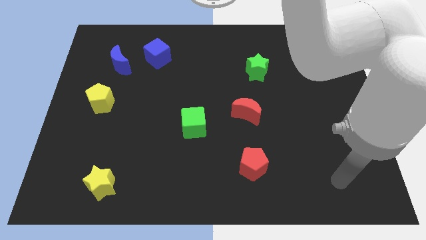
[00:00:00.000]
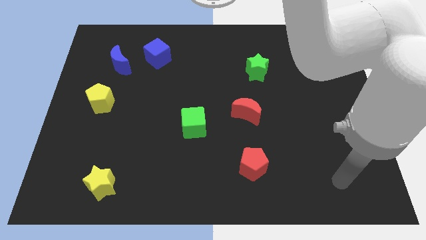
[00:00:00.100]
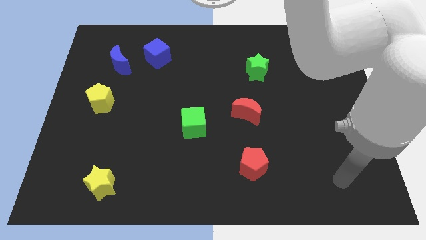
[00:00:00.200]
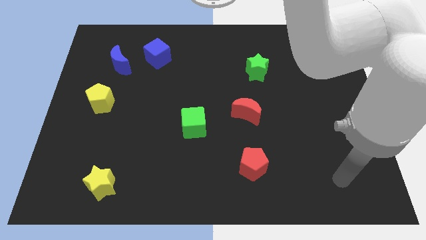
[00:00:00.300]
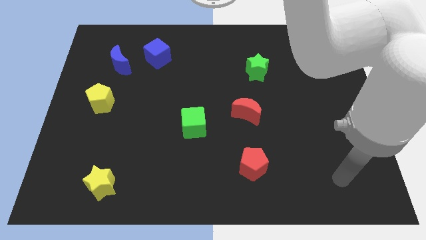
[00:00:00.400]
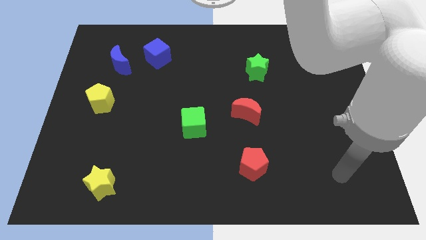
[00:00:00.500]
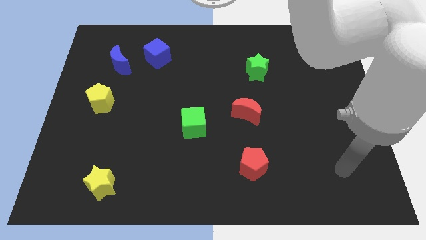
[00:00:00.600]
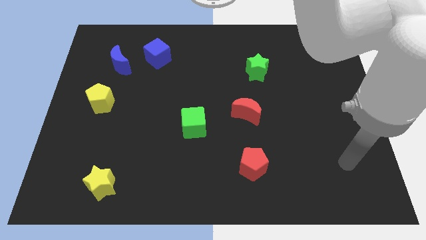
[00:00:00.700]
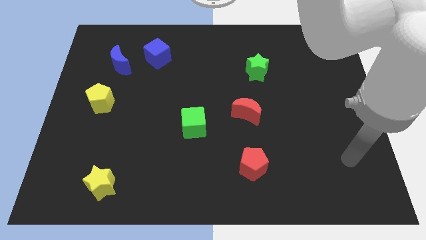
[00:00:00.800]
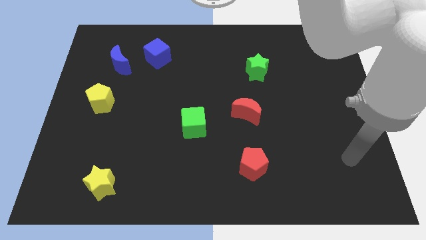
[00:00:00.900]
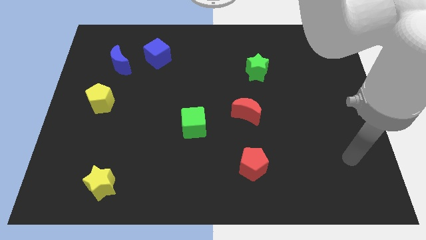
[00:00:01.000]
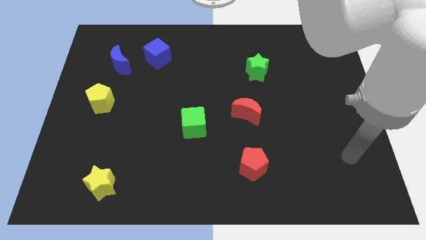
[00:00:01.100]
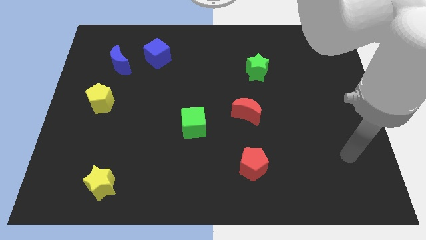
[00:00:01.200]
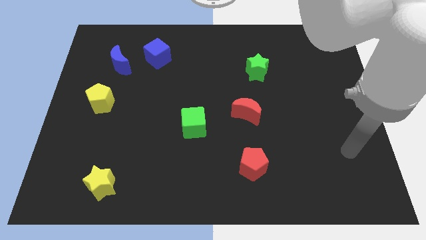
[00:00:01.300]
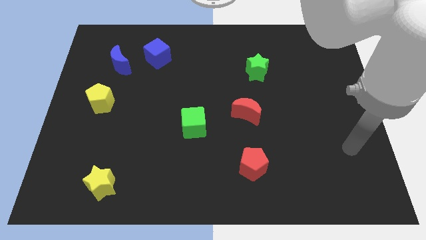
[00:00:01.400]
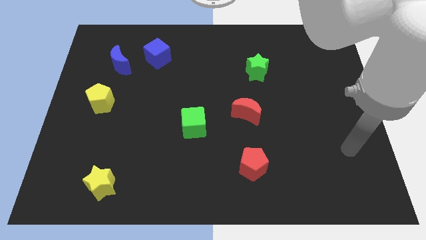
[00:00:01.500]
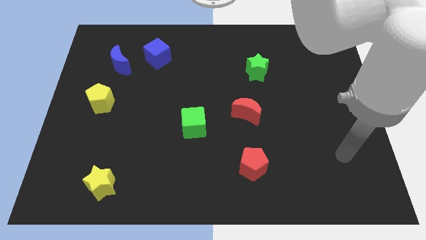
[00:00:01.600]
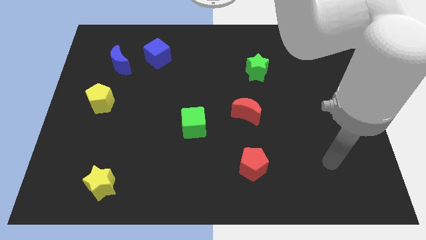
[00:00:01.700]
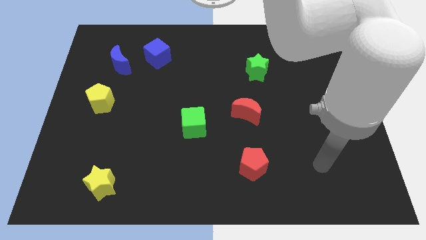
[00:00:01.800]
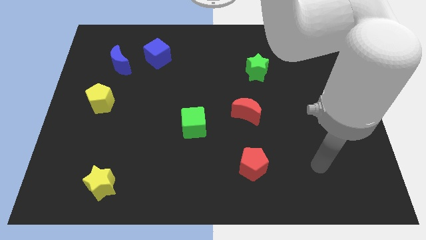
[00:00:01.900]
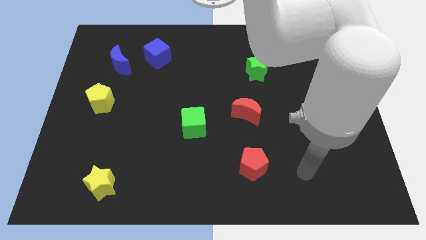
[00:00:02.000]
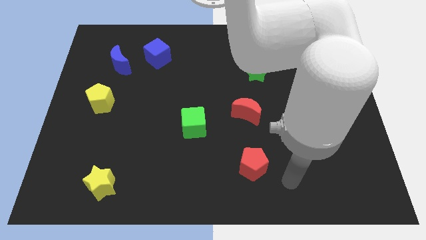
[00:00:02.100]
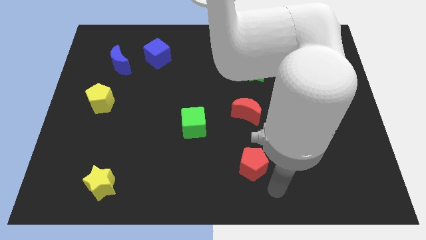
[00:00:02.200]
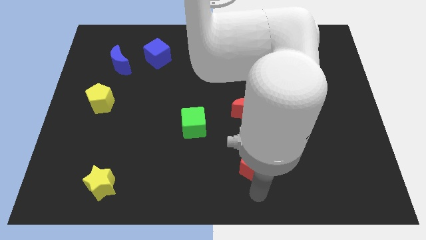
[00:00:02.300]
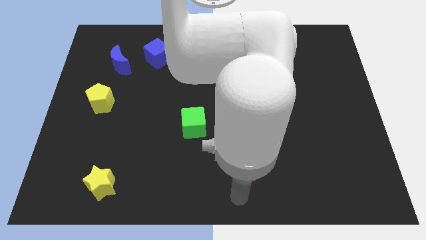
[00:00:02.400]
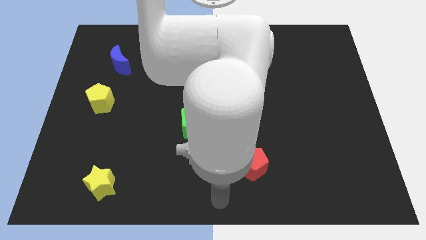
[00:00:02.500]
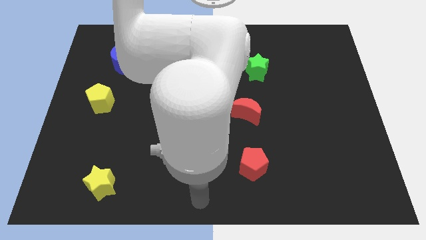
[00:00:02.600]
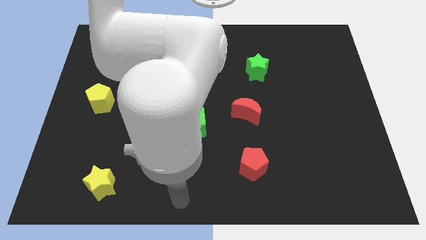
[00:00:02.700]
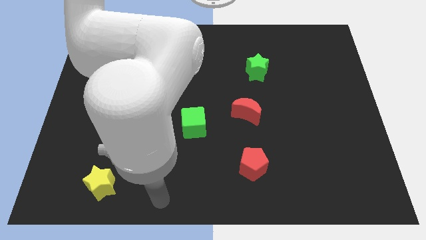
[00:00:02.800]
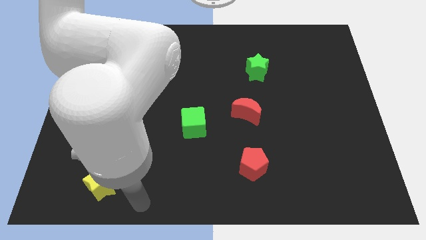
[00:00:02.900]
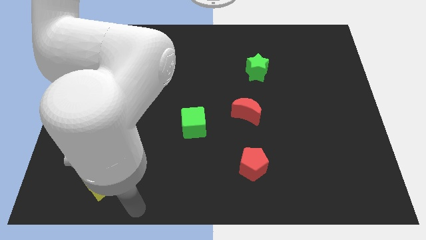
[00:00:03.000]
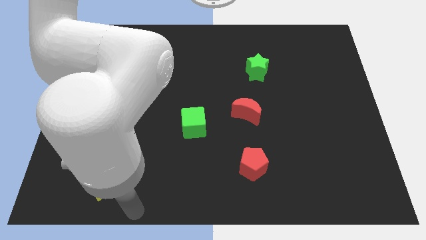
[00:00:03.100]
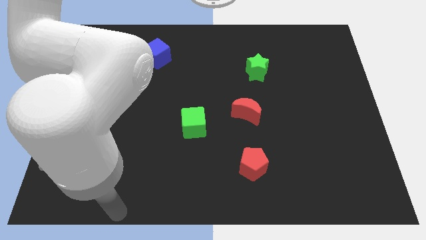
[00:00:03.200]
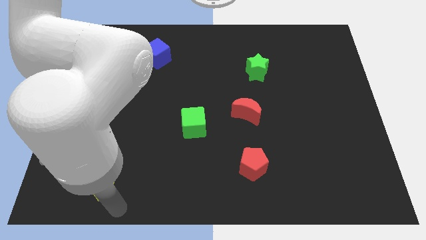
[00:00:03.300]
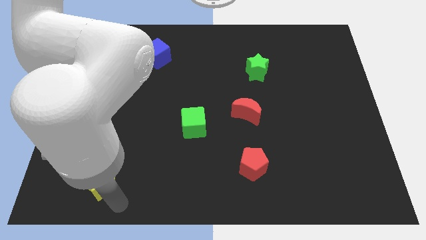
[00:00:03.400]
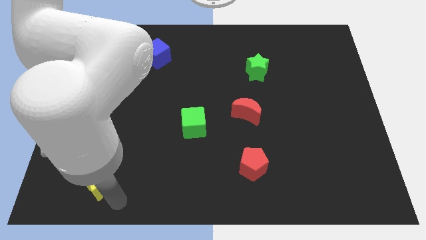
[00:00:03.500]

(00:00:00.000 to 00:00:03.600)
point your arm at the bottom of the yellow star

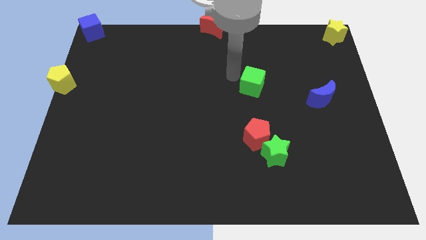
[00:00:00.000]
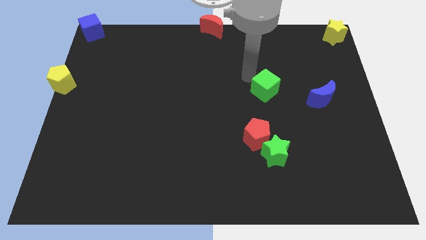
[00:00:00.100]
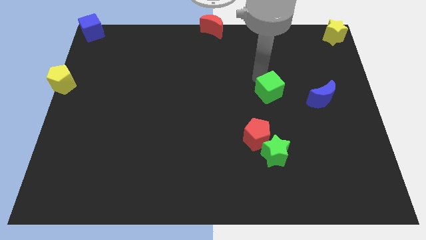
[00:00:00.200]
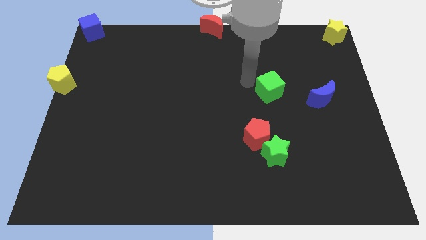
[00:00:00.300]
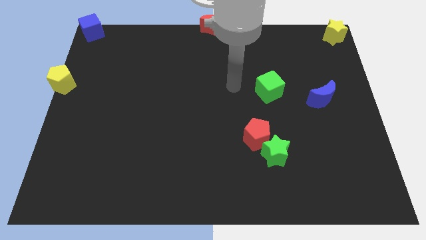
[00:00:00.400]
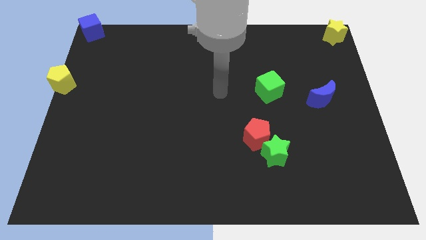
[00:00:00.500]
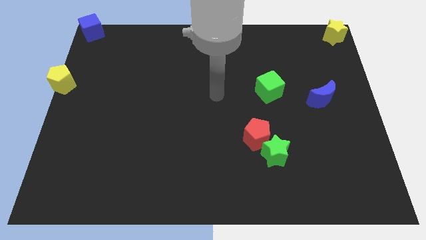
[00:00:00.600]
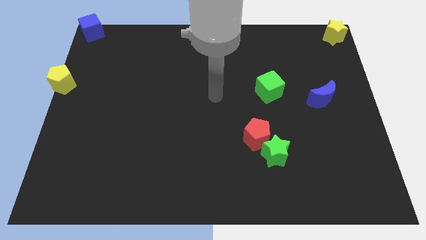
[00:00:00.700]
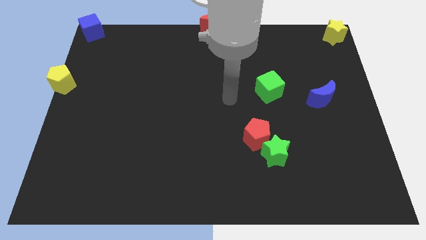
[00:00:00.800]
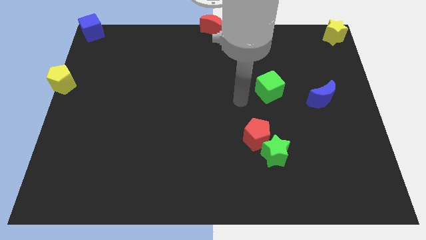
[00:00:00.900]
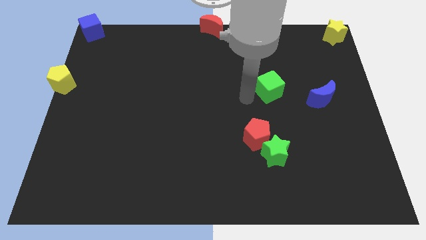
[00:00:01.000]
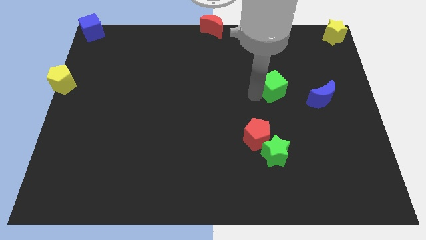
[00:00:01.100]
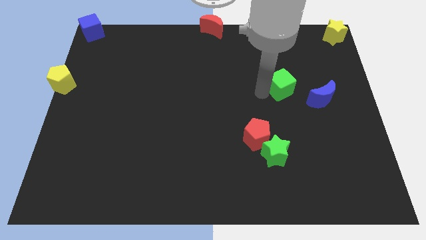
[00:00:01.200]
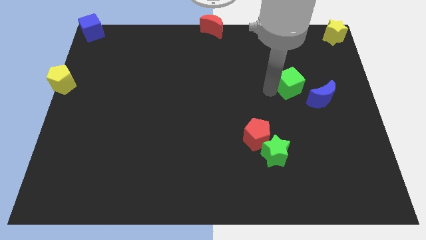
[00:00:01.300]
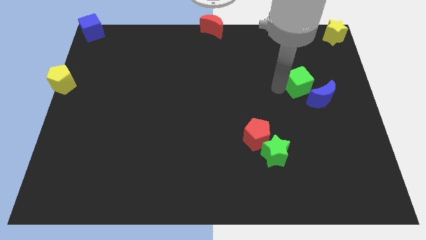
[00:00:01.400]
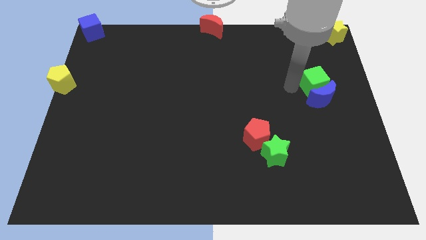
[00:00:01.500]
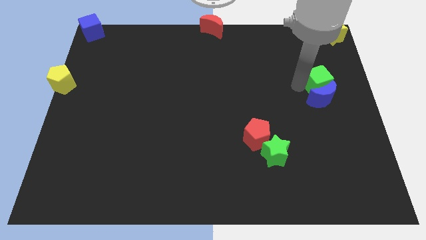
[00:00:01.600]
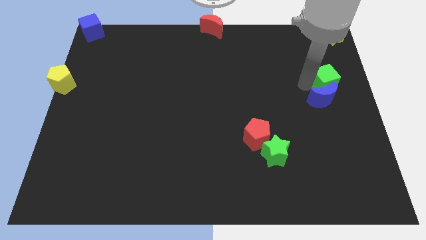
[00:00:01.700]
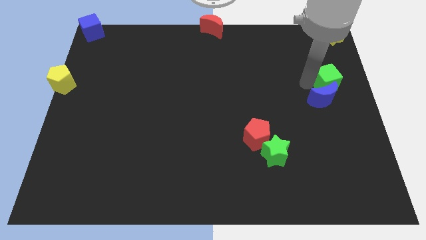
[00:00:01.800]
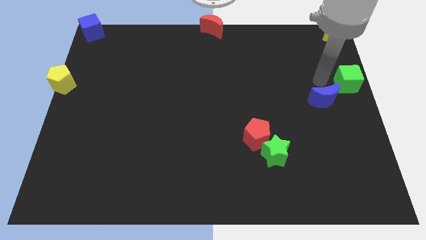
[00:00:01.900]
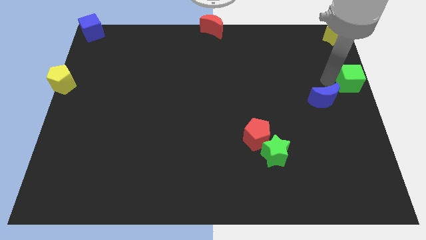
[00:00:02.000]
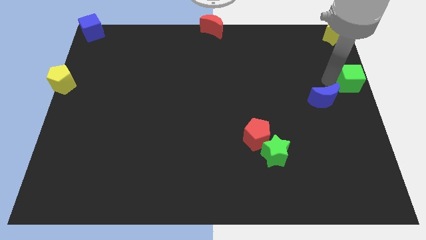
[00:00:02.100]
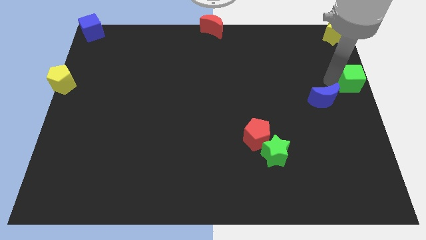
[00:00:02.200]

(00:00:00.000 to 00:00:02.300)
push the green cube below the yellow star

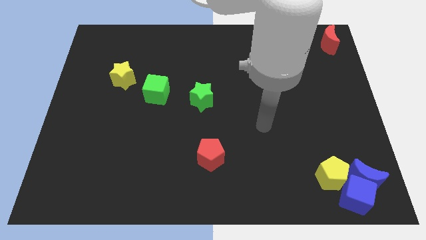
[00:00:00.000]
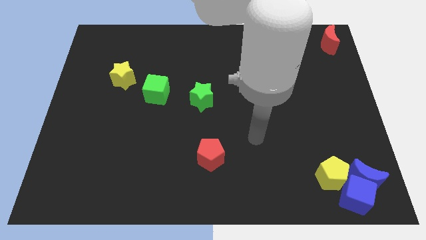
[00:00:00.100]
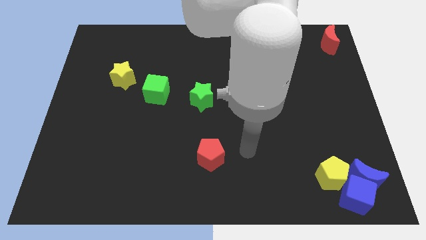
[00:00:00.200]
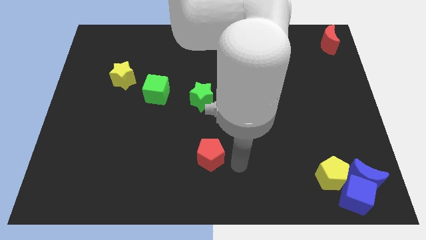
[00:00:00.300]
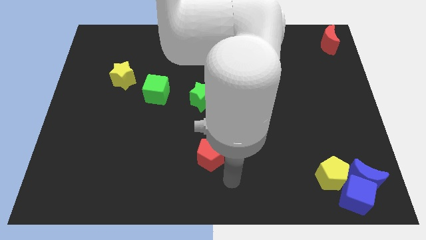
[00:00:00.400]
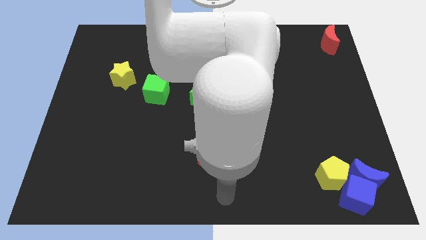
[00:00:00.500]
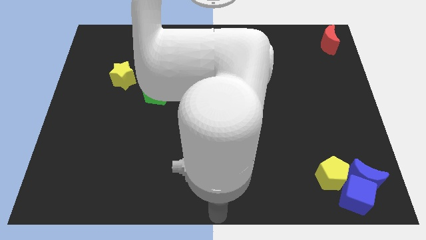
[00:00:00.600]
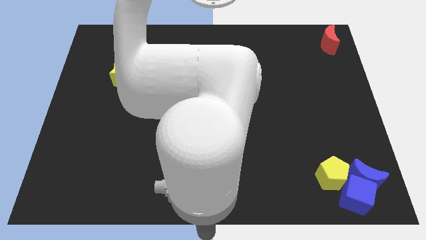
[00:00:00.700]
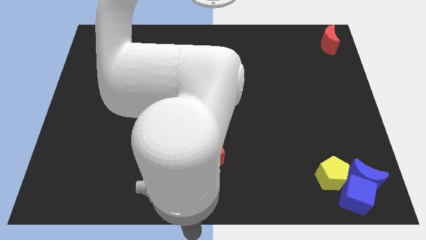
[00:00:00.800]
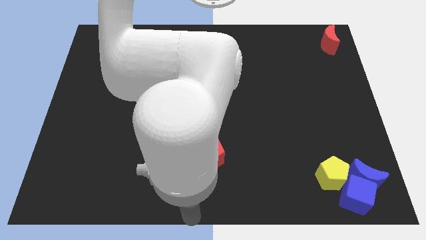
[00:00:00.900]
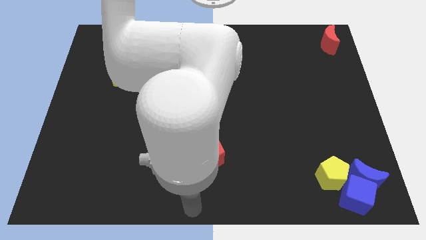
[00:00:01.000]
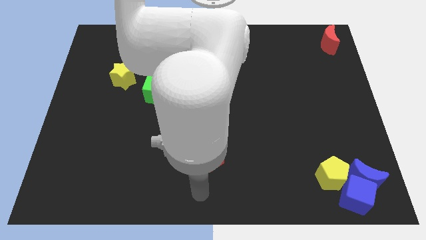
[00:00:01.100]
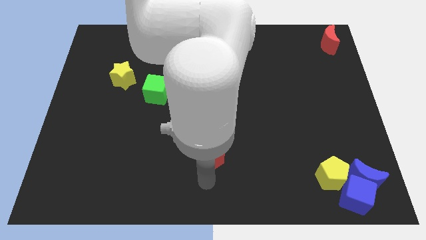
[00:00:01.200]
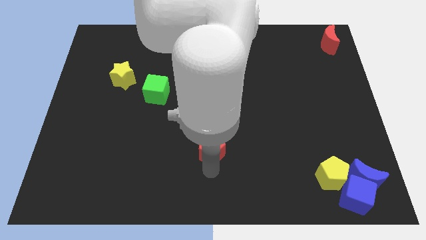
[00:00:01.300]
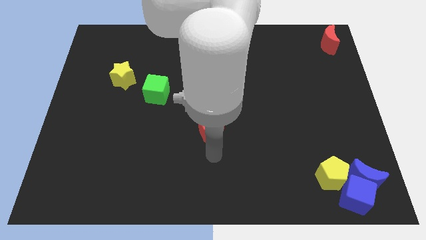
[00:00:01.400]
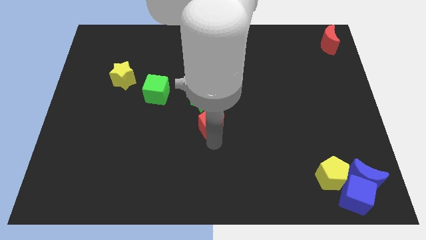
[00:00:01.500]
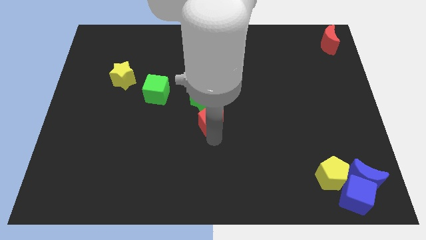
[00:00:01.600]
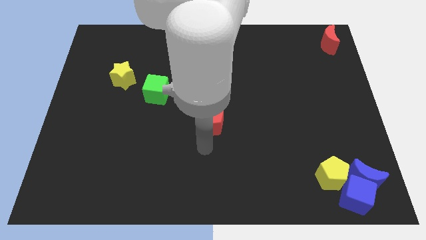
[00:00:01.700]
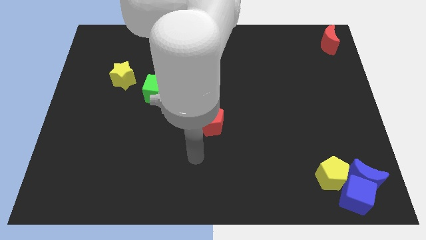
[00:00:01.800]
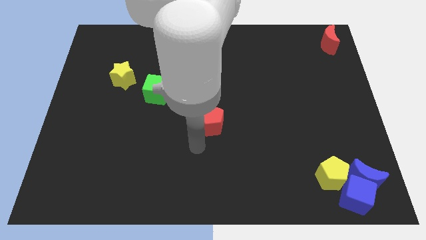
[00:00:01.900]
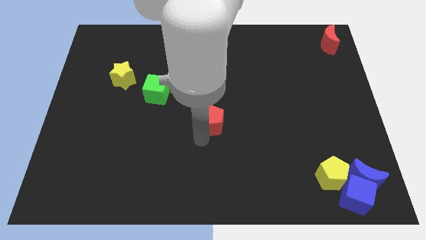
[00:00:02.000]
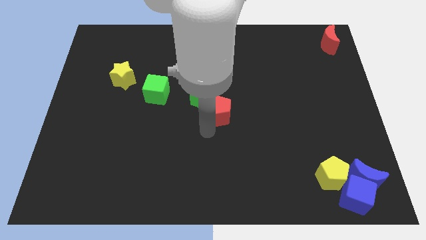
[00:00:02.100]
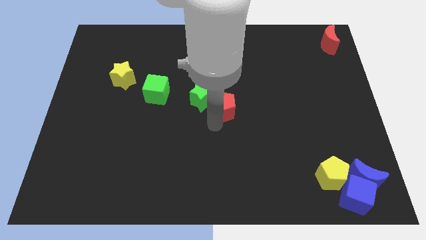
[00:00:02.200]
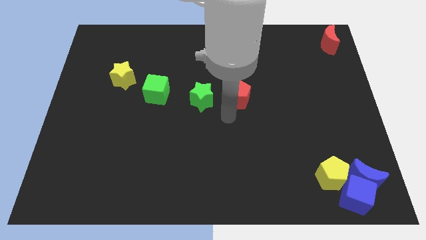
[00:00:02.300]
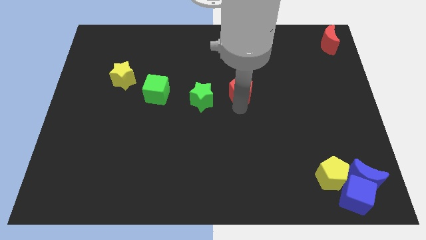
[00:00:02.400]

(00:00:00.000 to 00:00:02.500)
put red pentagon parallel right to green star

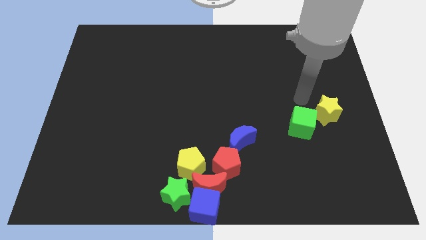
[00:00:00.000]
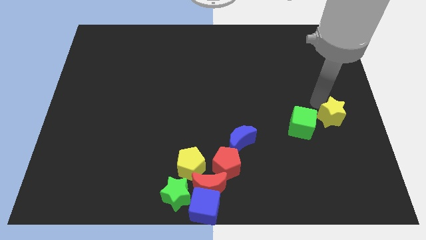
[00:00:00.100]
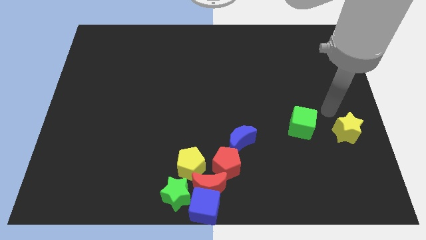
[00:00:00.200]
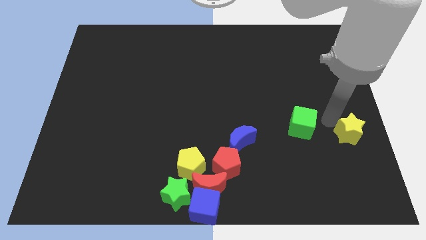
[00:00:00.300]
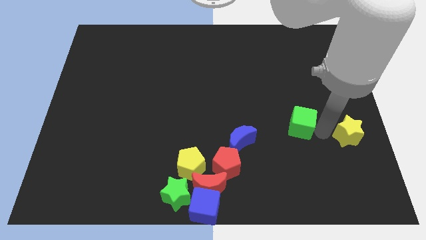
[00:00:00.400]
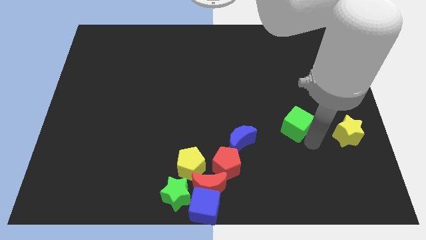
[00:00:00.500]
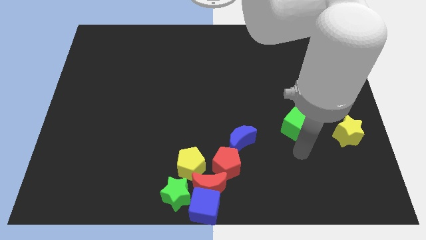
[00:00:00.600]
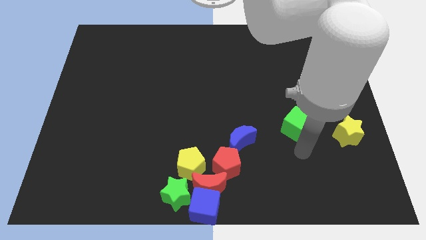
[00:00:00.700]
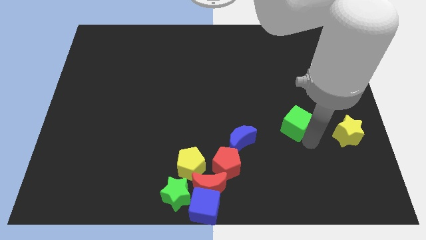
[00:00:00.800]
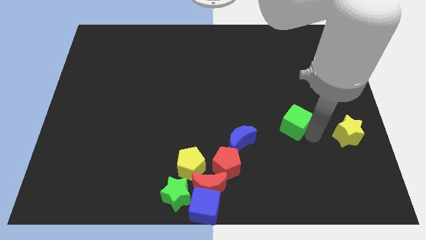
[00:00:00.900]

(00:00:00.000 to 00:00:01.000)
push the yellow star slightly down
